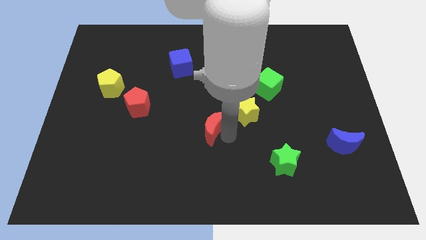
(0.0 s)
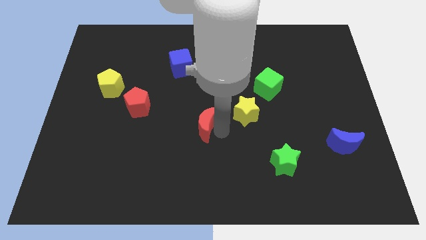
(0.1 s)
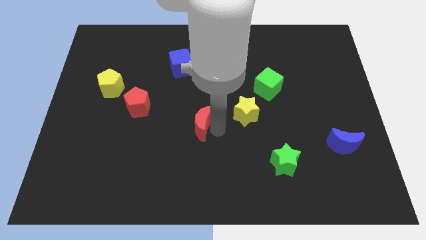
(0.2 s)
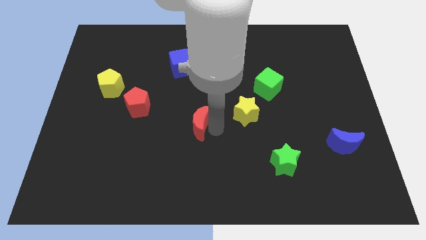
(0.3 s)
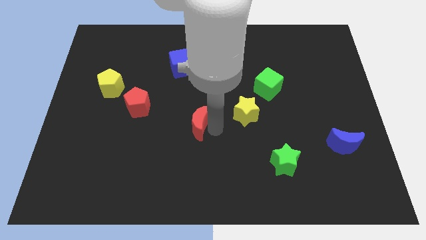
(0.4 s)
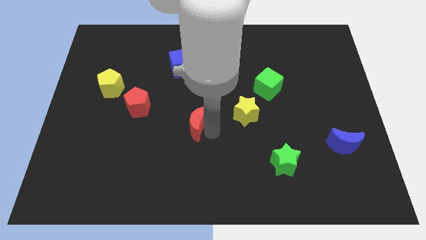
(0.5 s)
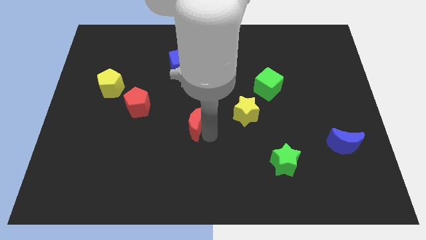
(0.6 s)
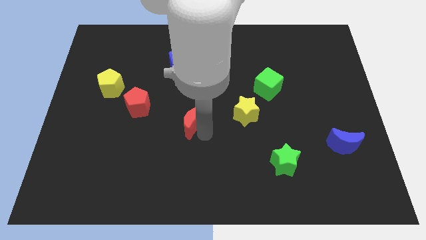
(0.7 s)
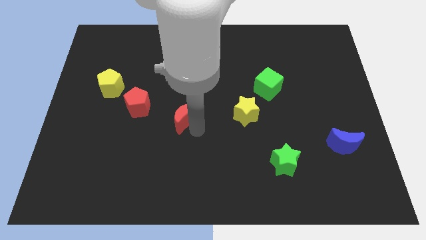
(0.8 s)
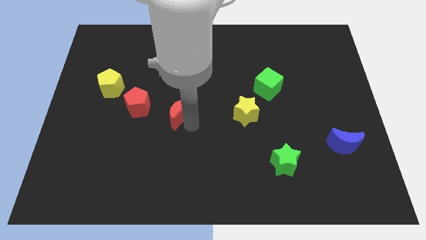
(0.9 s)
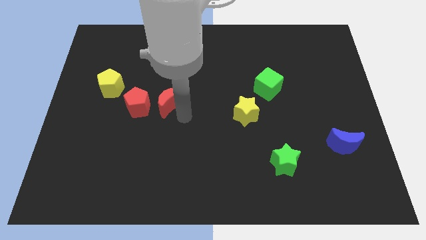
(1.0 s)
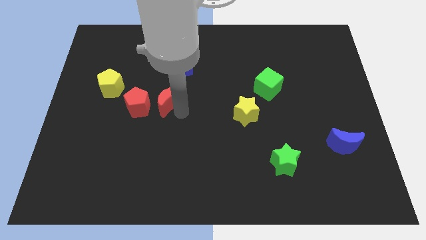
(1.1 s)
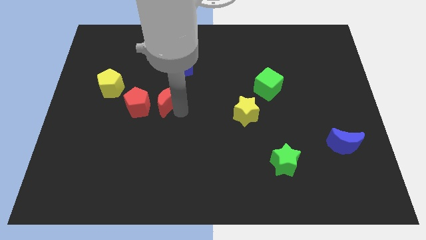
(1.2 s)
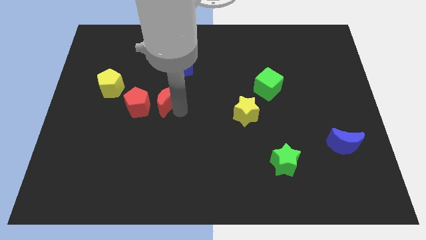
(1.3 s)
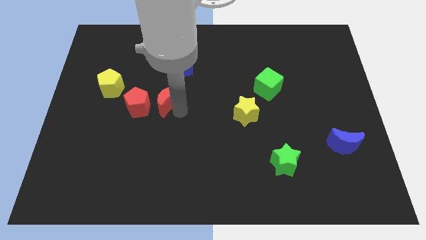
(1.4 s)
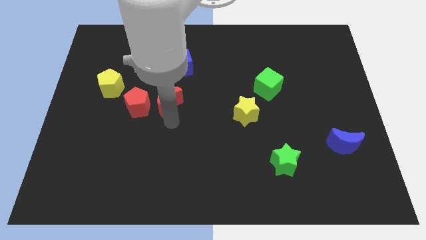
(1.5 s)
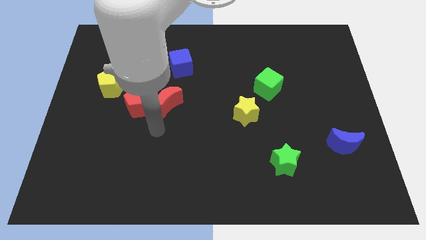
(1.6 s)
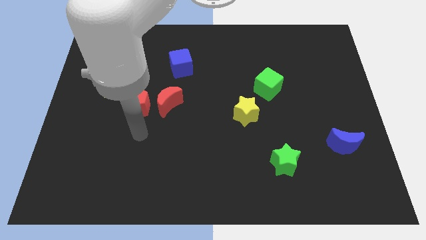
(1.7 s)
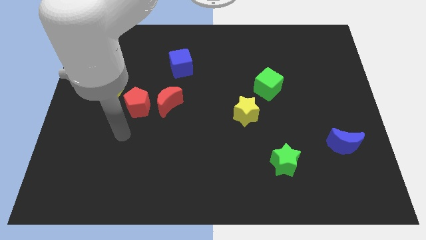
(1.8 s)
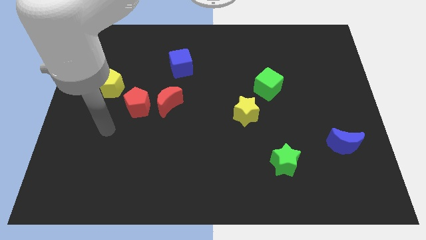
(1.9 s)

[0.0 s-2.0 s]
put the red moon right to the red pentagon

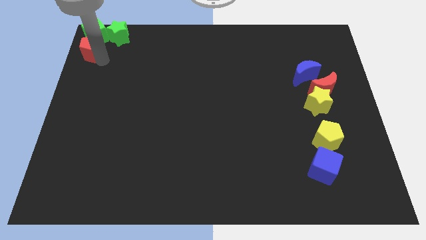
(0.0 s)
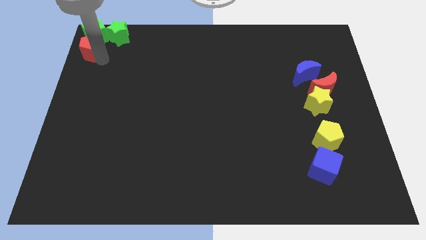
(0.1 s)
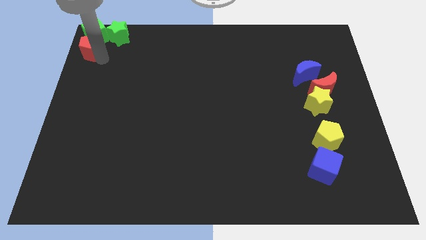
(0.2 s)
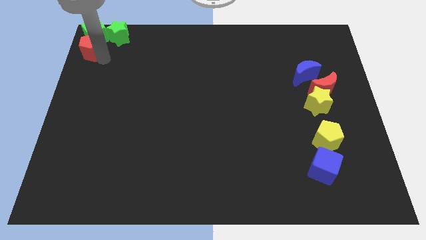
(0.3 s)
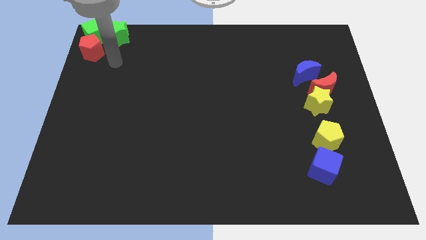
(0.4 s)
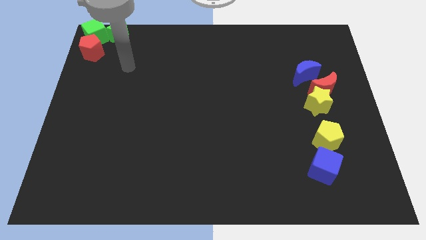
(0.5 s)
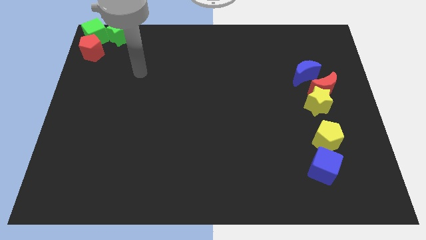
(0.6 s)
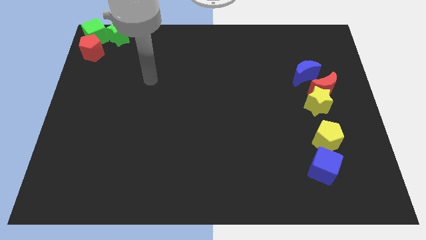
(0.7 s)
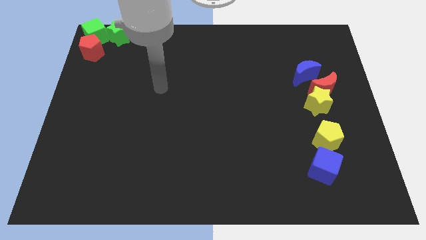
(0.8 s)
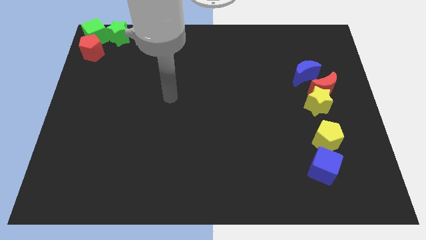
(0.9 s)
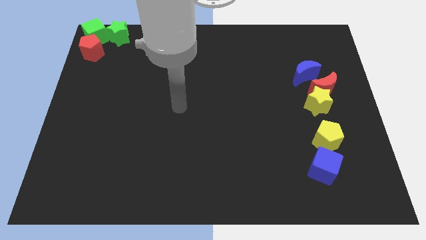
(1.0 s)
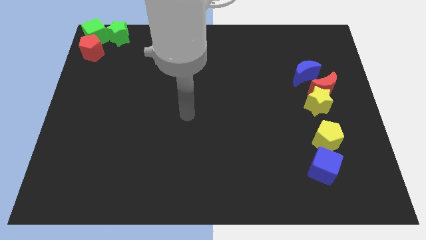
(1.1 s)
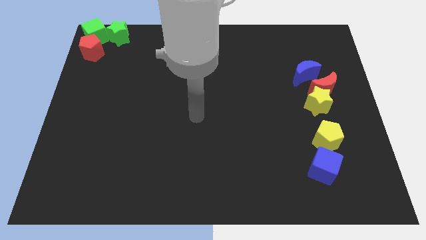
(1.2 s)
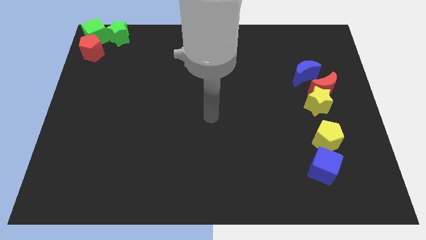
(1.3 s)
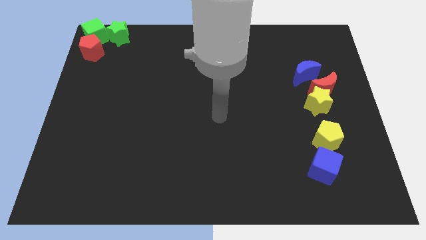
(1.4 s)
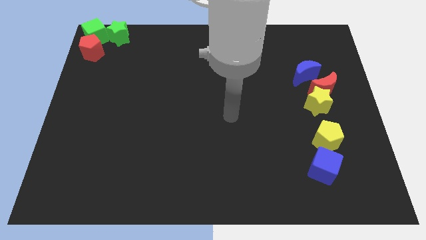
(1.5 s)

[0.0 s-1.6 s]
place your arm at the center of the board

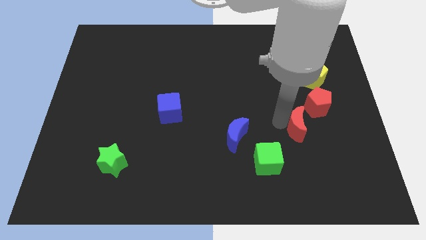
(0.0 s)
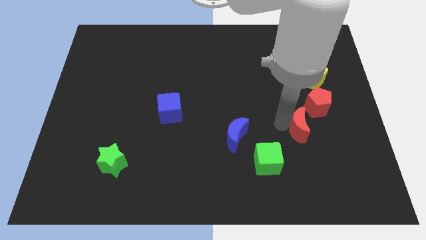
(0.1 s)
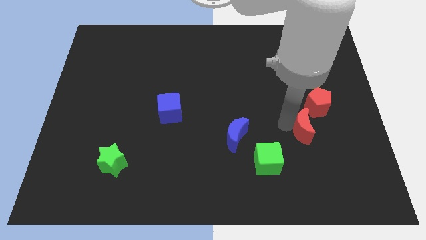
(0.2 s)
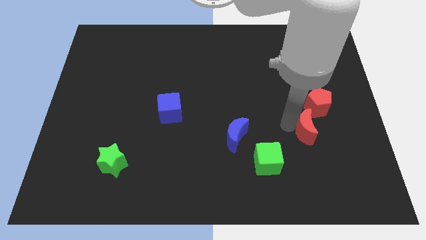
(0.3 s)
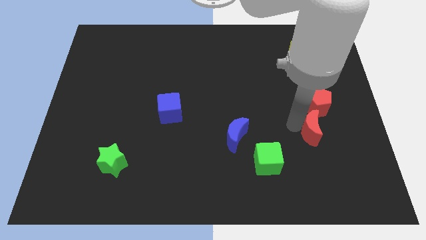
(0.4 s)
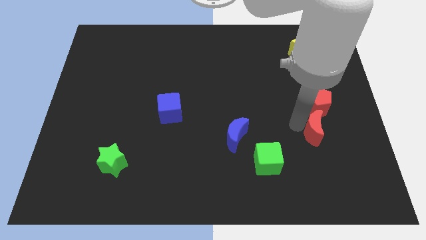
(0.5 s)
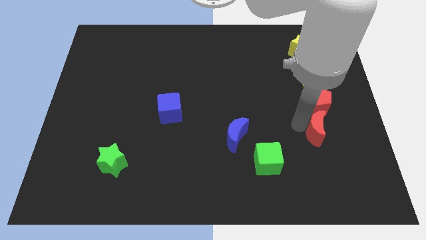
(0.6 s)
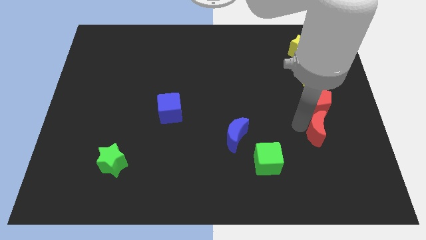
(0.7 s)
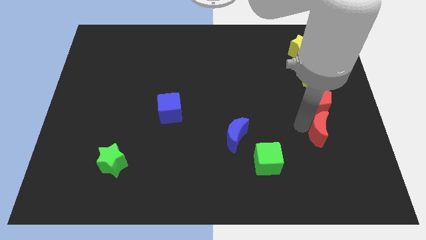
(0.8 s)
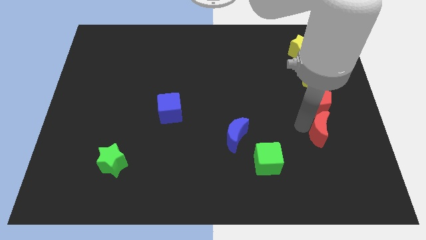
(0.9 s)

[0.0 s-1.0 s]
put red moon below red pentagon

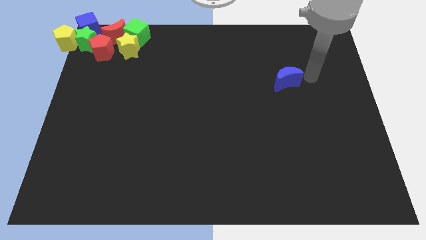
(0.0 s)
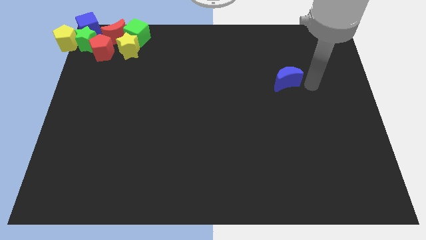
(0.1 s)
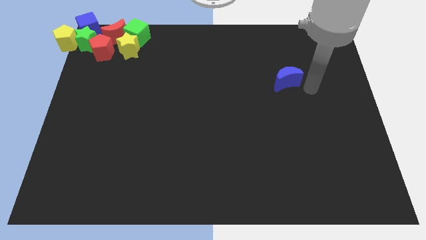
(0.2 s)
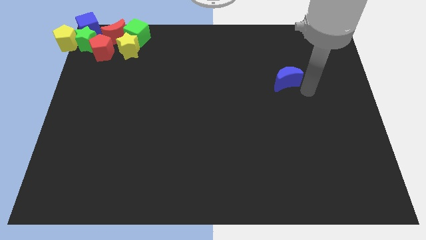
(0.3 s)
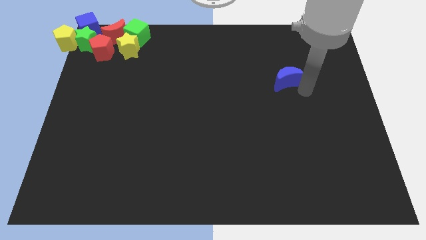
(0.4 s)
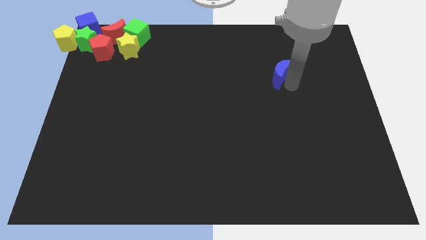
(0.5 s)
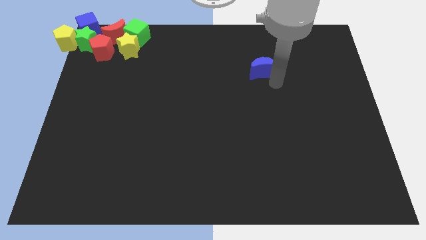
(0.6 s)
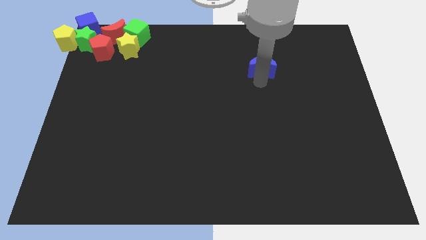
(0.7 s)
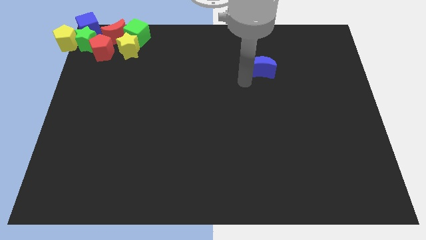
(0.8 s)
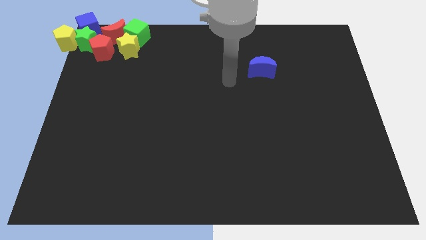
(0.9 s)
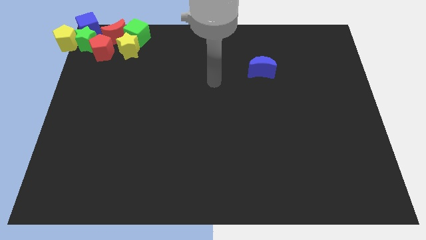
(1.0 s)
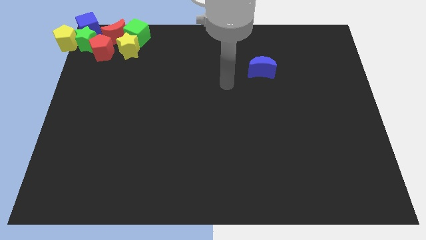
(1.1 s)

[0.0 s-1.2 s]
move the blue crescent slightly to the top center of the board

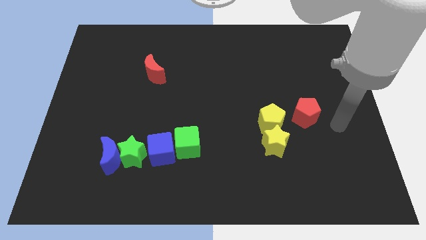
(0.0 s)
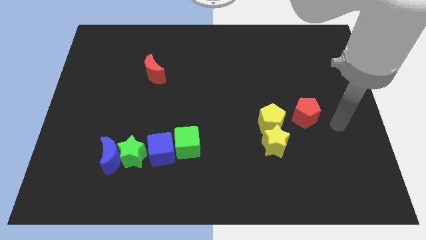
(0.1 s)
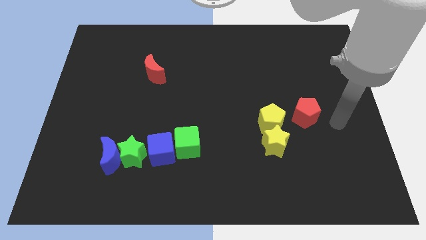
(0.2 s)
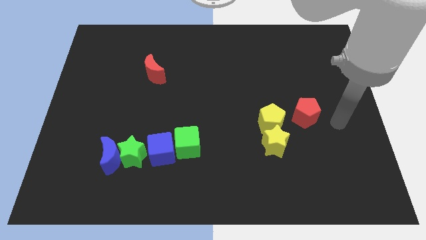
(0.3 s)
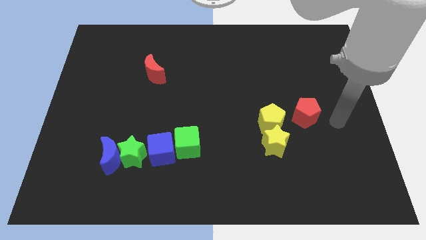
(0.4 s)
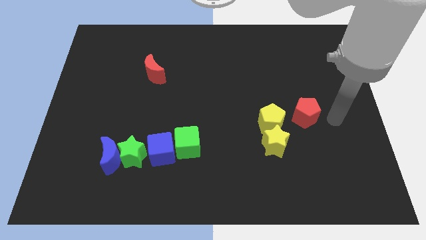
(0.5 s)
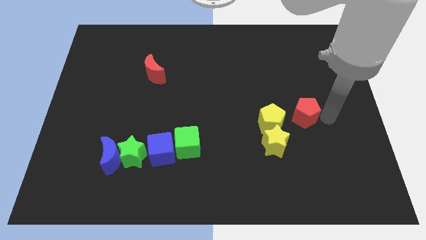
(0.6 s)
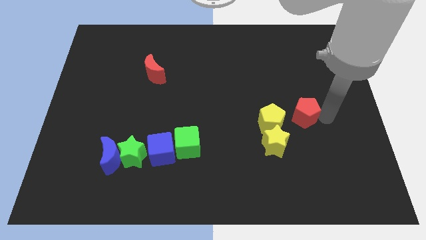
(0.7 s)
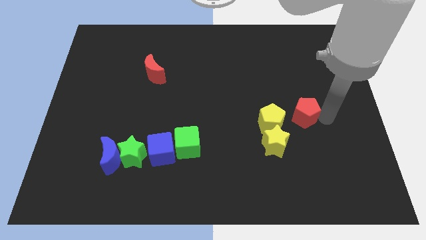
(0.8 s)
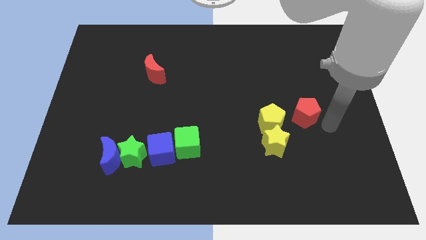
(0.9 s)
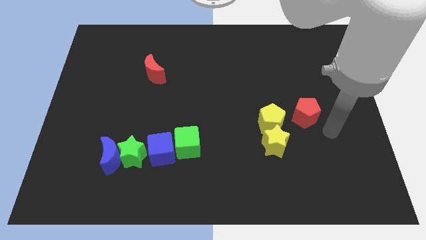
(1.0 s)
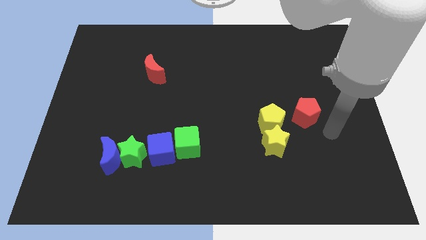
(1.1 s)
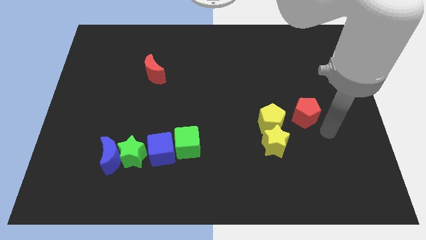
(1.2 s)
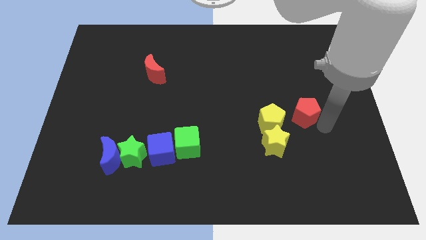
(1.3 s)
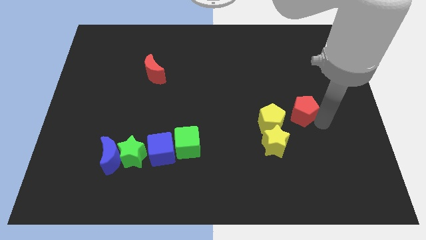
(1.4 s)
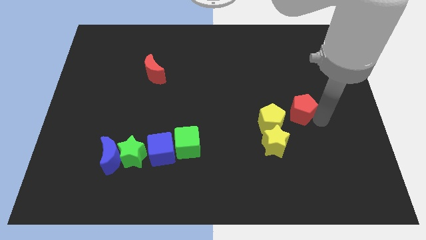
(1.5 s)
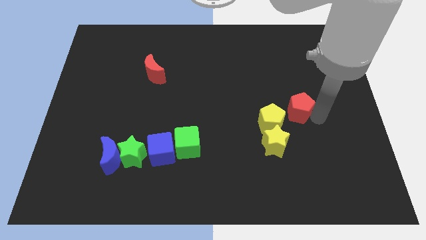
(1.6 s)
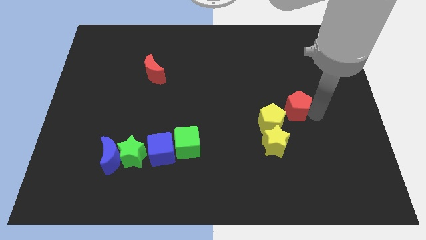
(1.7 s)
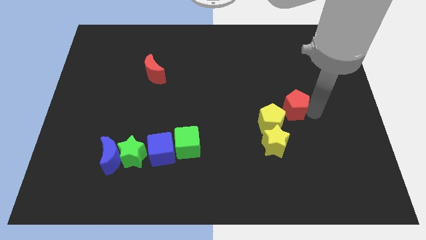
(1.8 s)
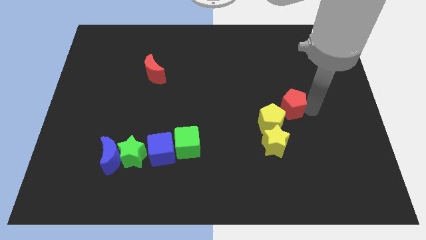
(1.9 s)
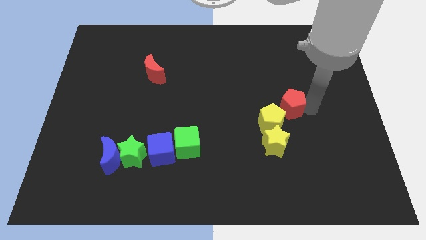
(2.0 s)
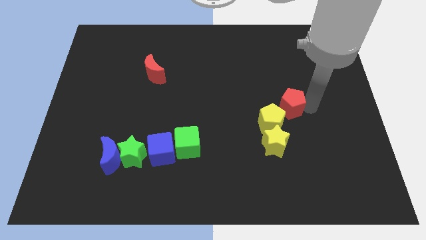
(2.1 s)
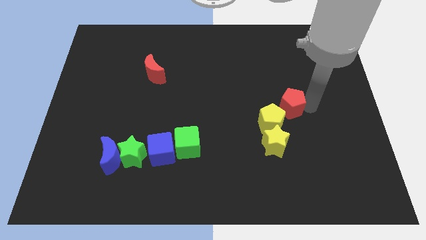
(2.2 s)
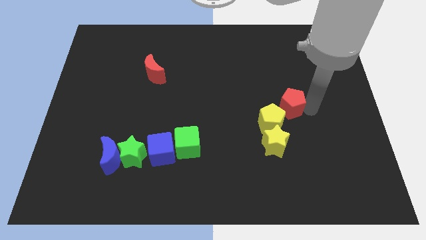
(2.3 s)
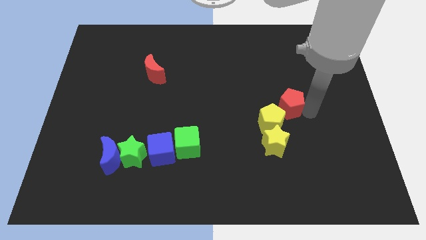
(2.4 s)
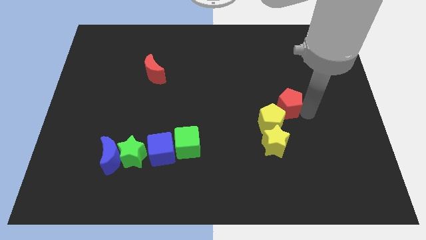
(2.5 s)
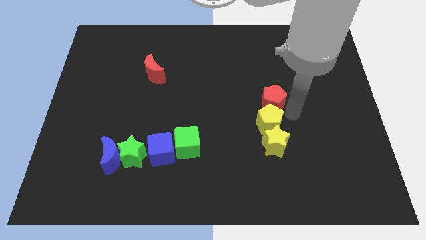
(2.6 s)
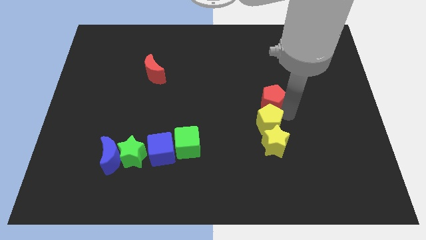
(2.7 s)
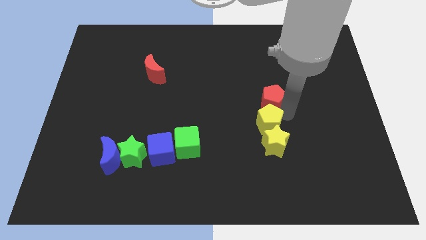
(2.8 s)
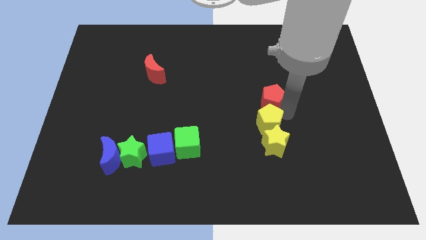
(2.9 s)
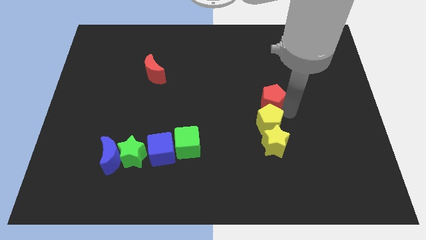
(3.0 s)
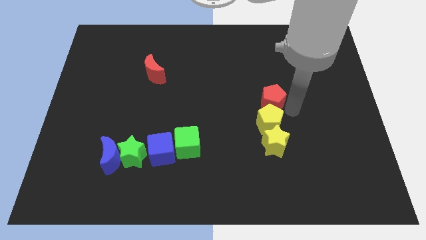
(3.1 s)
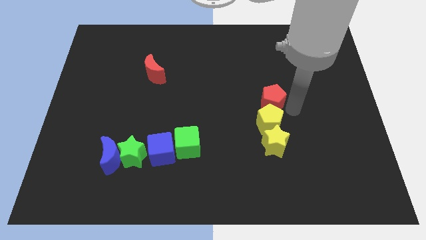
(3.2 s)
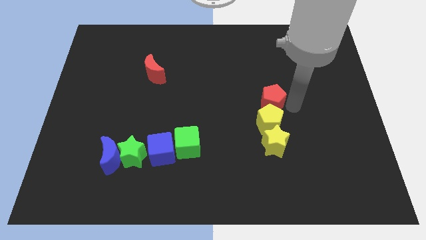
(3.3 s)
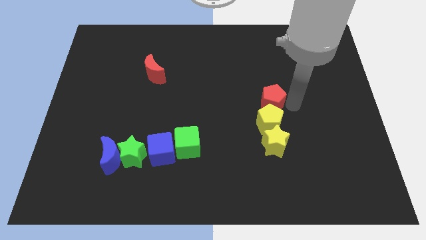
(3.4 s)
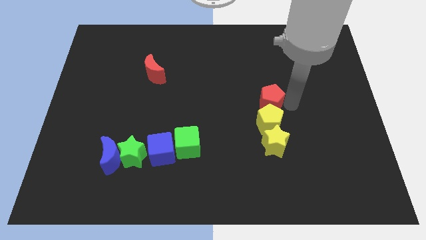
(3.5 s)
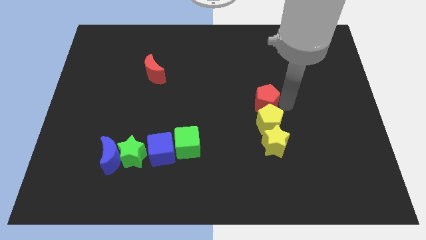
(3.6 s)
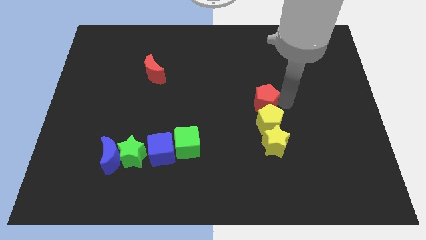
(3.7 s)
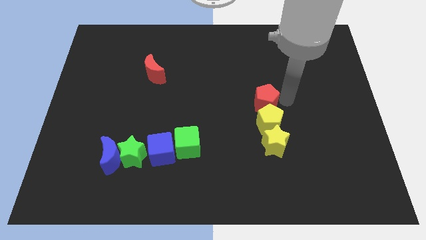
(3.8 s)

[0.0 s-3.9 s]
place red pentagon above yellow pentagon
